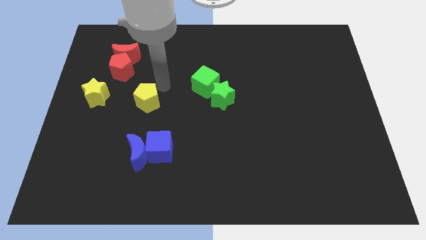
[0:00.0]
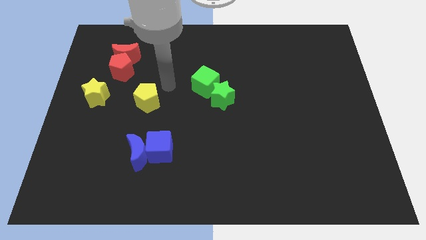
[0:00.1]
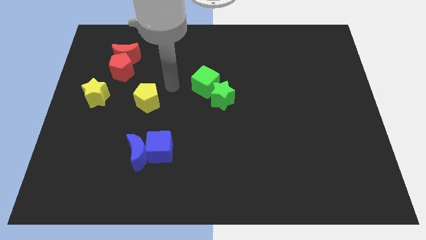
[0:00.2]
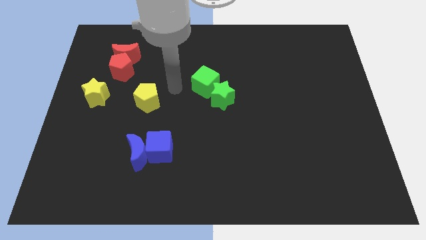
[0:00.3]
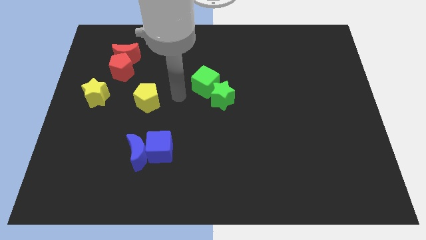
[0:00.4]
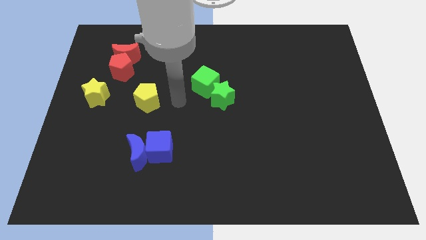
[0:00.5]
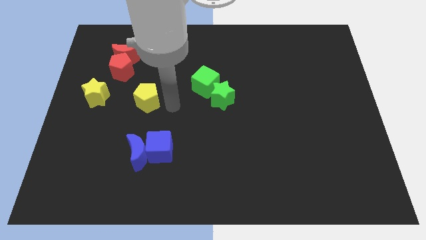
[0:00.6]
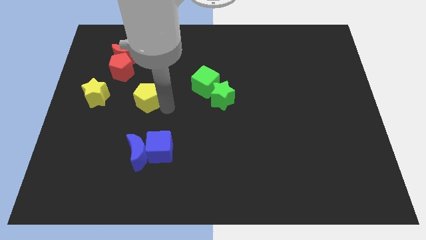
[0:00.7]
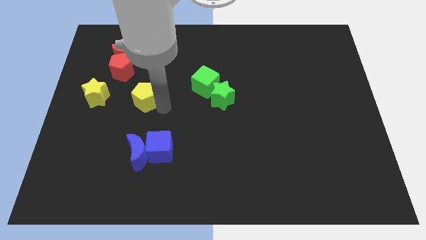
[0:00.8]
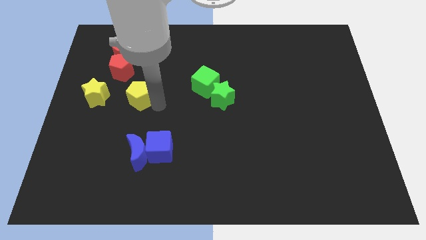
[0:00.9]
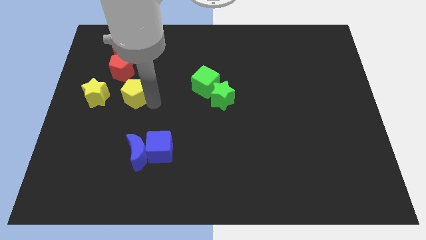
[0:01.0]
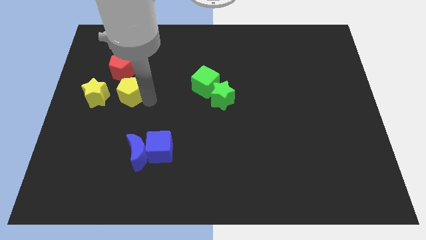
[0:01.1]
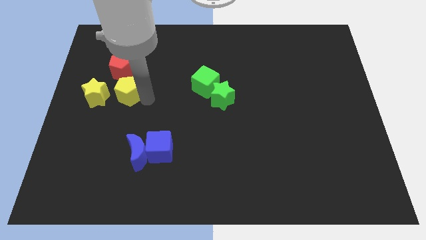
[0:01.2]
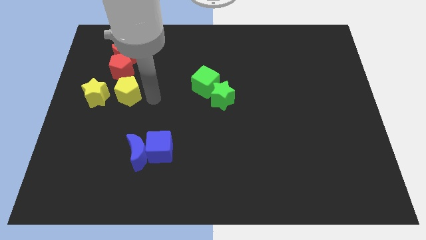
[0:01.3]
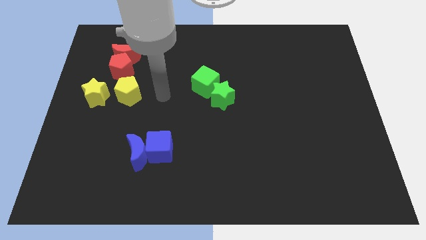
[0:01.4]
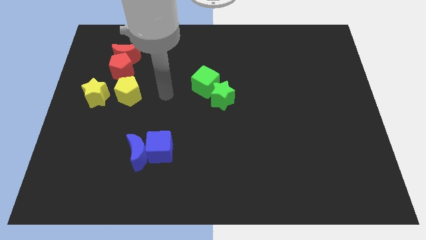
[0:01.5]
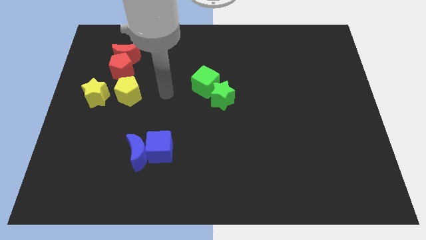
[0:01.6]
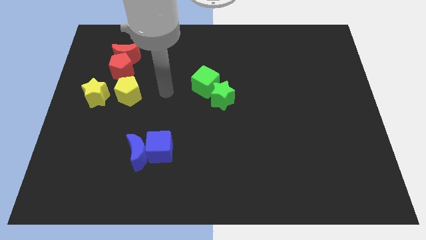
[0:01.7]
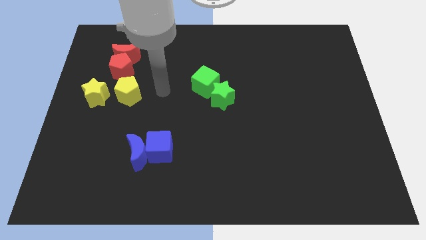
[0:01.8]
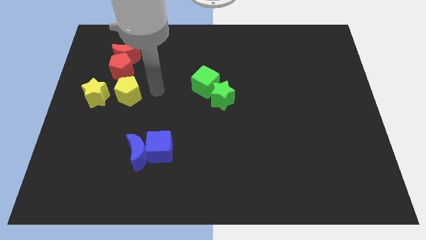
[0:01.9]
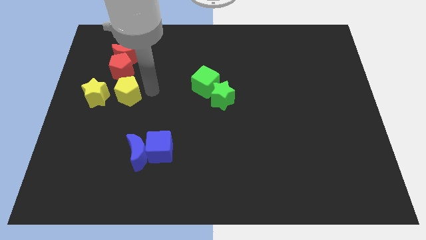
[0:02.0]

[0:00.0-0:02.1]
push yellow pentagon close to yellow star

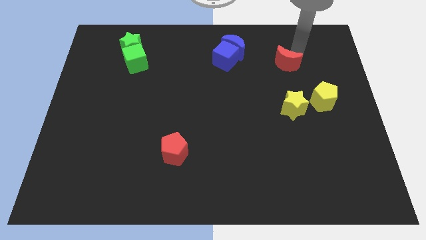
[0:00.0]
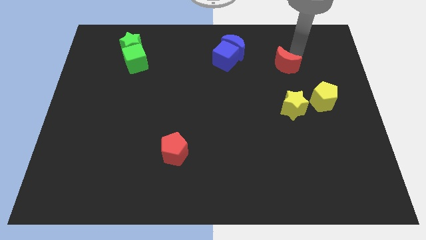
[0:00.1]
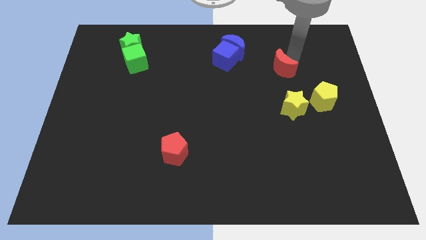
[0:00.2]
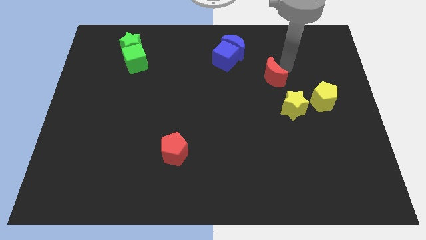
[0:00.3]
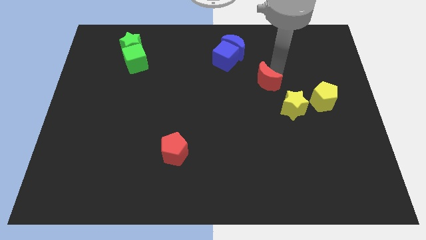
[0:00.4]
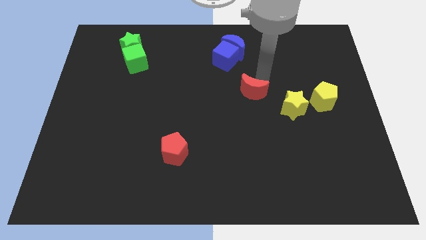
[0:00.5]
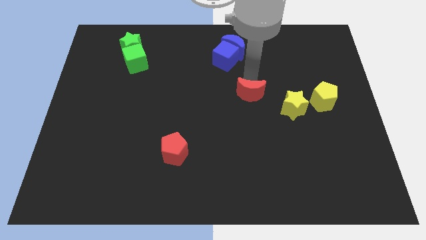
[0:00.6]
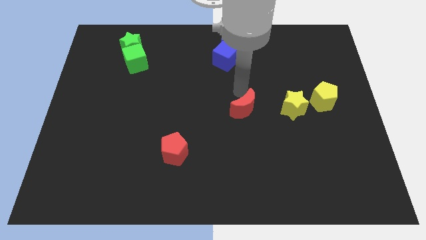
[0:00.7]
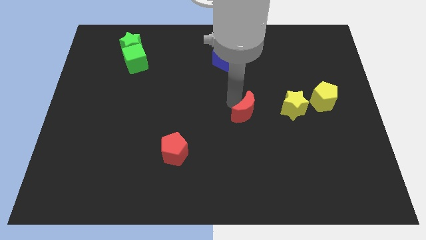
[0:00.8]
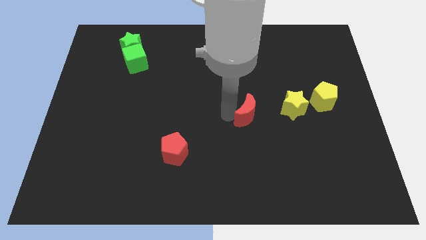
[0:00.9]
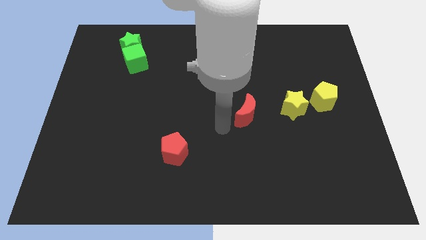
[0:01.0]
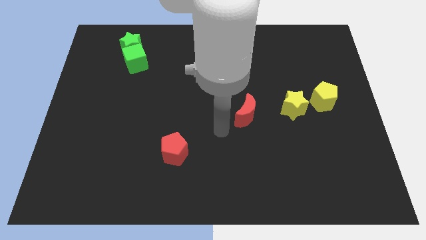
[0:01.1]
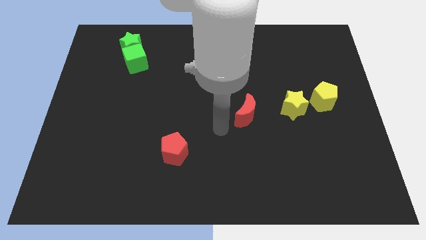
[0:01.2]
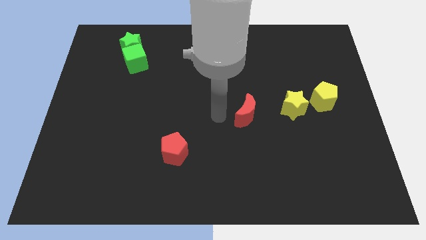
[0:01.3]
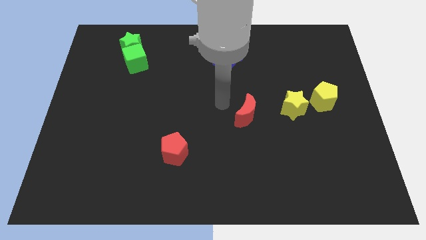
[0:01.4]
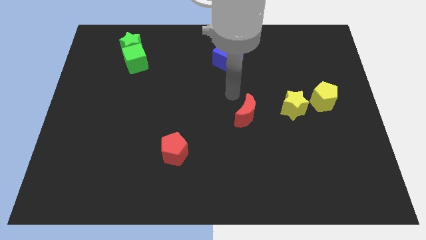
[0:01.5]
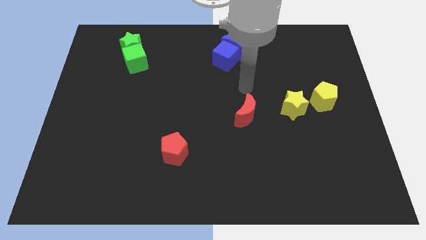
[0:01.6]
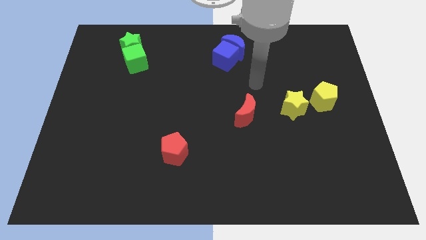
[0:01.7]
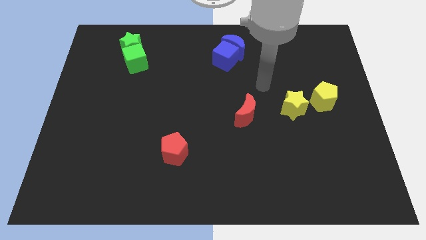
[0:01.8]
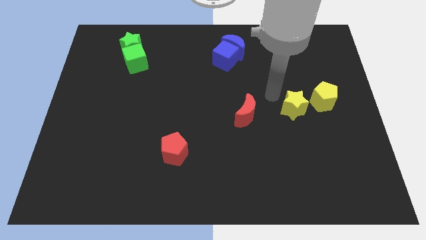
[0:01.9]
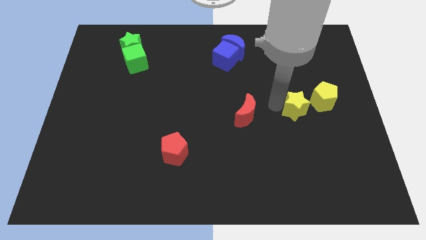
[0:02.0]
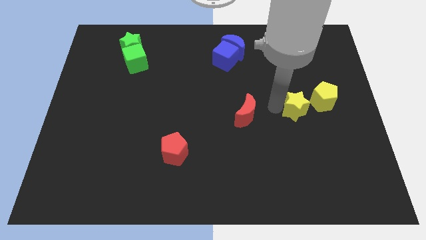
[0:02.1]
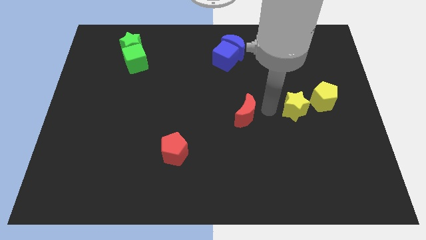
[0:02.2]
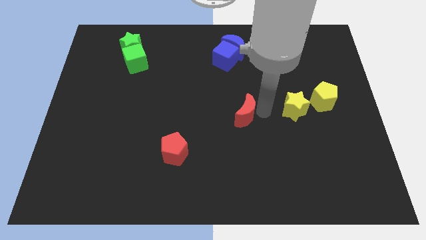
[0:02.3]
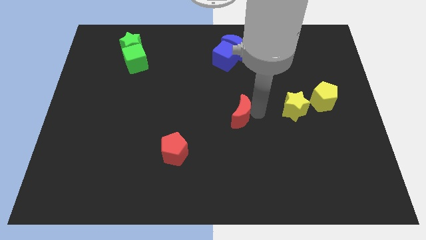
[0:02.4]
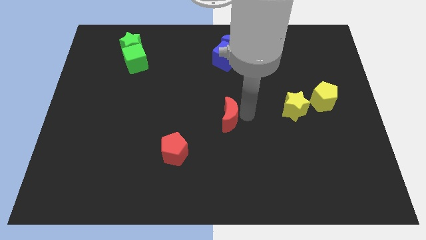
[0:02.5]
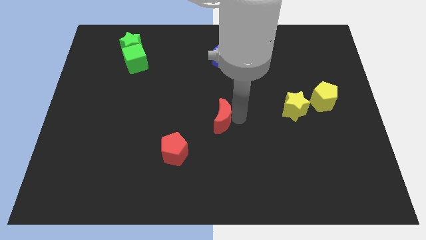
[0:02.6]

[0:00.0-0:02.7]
push red crescent below blue cube

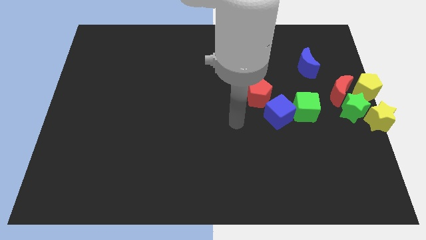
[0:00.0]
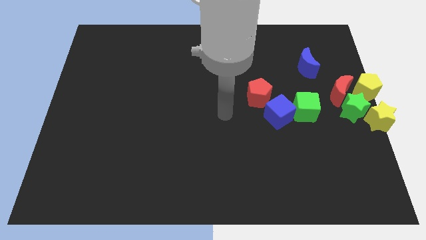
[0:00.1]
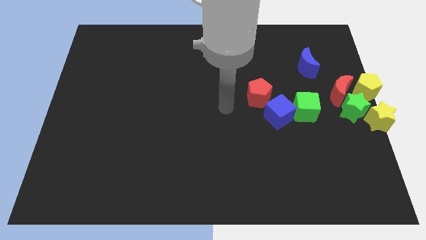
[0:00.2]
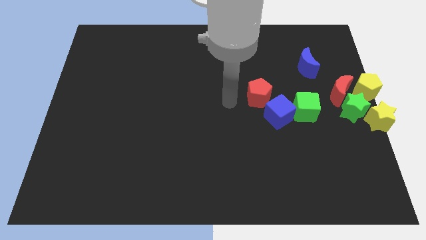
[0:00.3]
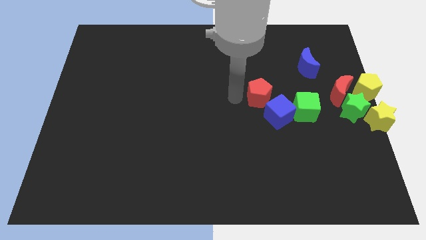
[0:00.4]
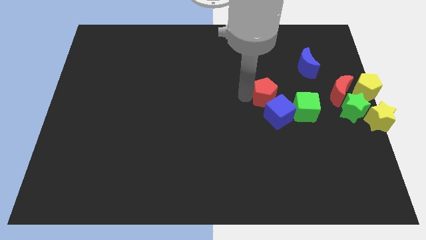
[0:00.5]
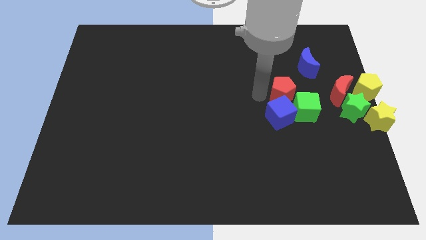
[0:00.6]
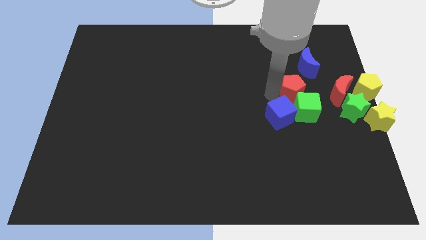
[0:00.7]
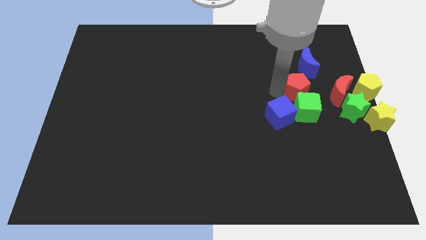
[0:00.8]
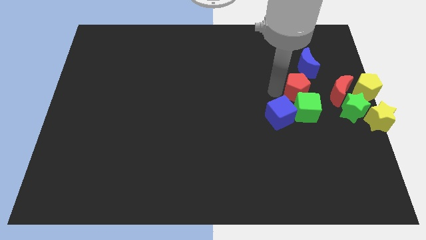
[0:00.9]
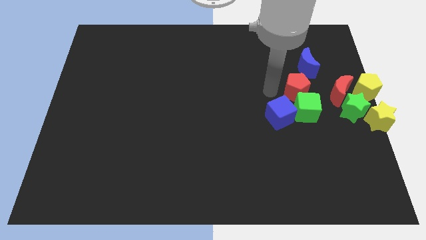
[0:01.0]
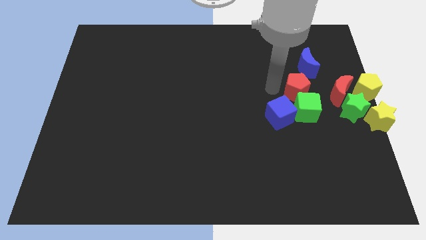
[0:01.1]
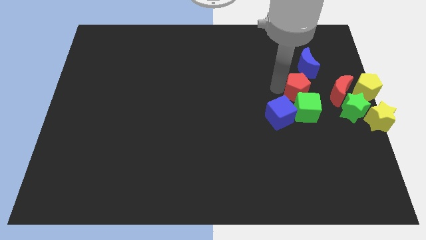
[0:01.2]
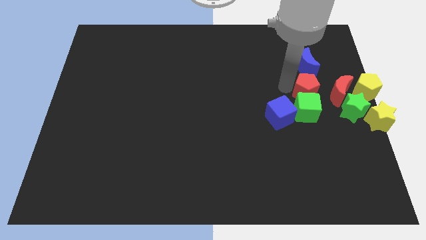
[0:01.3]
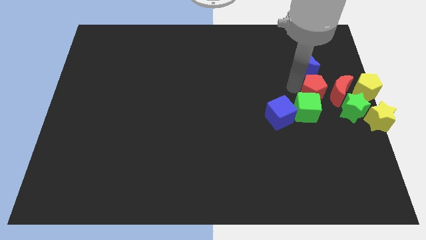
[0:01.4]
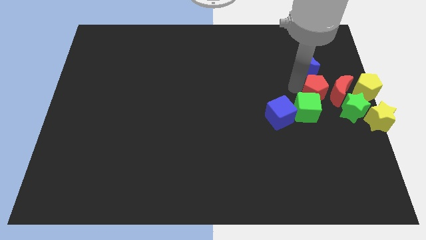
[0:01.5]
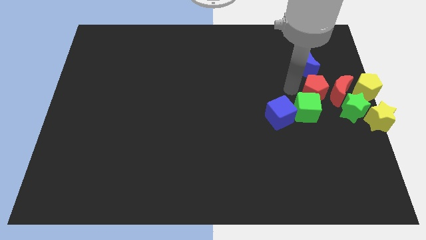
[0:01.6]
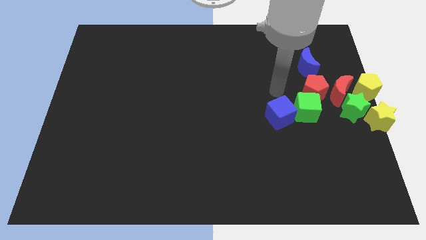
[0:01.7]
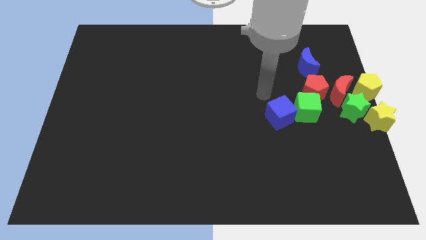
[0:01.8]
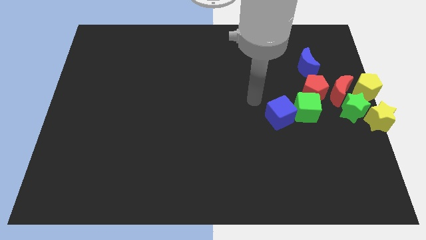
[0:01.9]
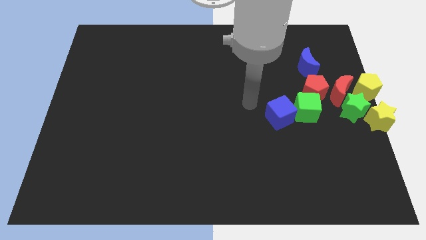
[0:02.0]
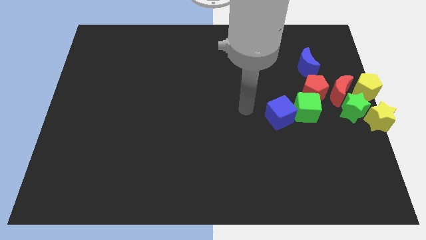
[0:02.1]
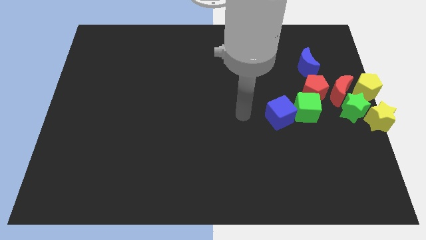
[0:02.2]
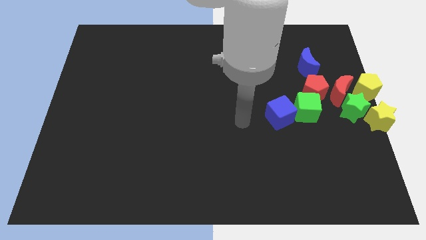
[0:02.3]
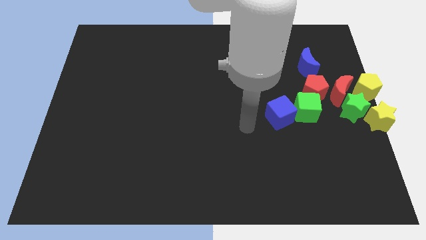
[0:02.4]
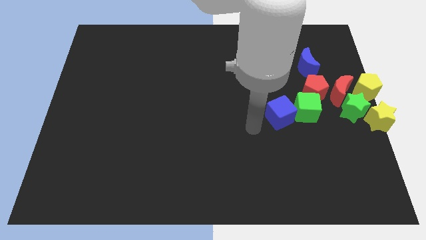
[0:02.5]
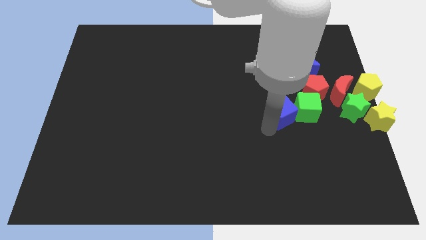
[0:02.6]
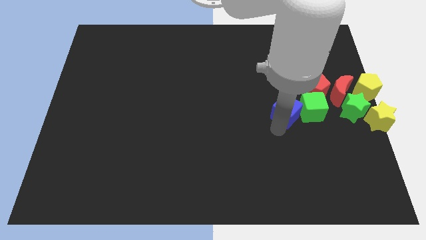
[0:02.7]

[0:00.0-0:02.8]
push the red pentagon closer to the red moon

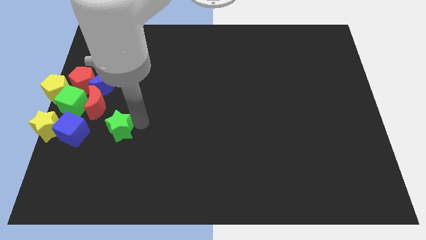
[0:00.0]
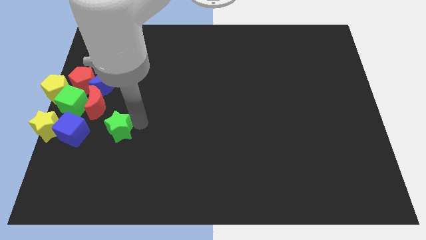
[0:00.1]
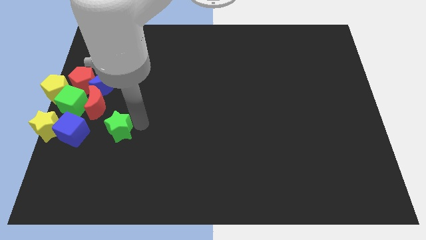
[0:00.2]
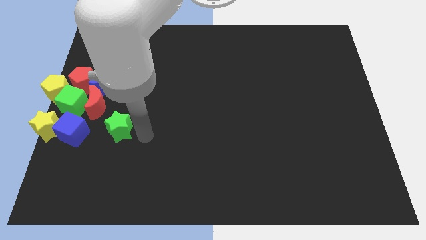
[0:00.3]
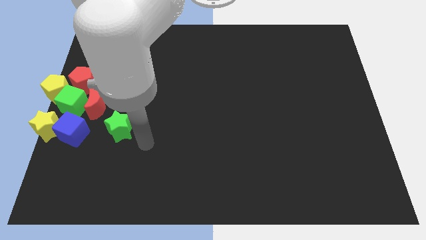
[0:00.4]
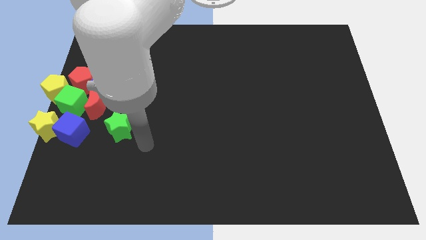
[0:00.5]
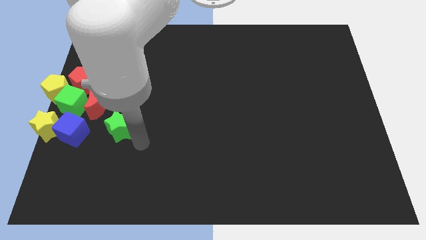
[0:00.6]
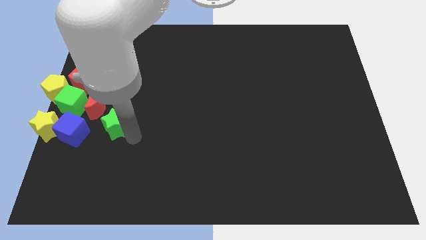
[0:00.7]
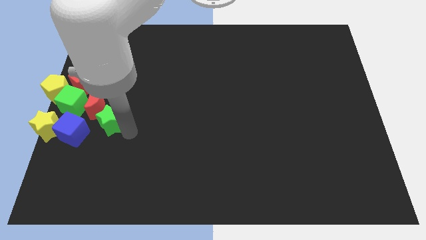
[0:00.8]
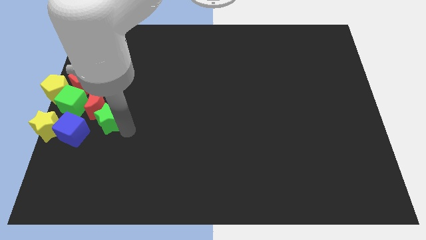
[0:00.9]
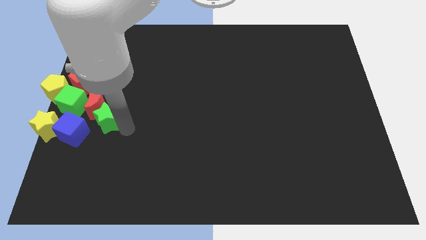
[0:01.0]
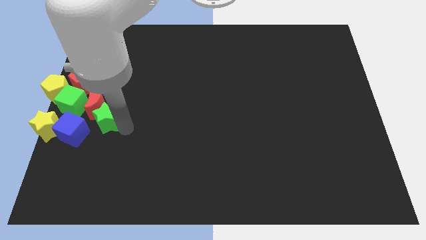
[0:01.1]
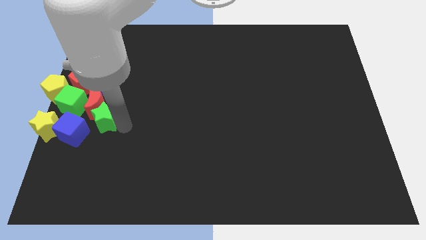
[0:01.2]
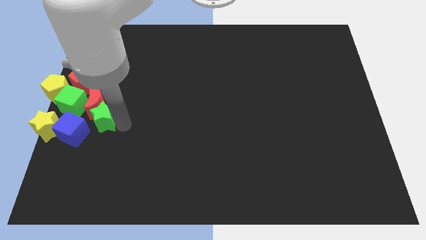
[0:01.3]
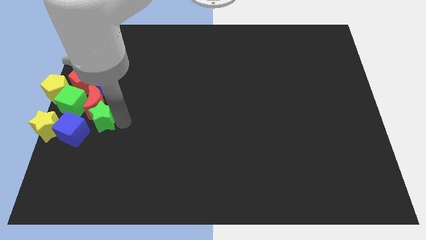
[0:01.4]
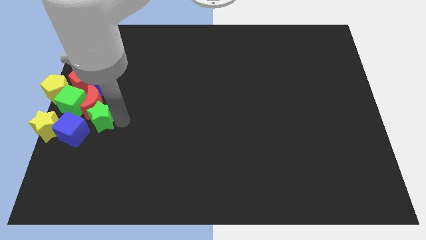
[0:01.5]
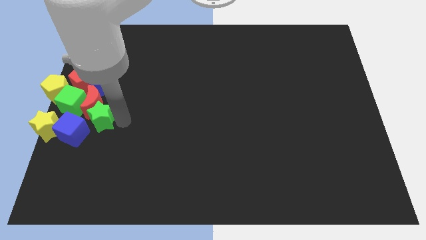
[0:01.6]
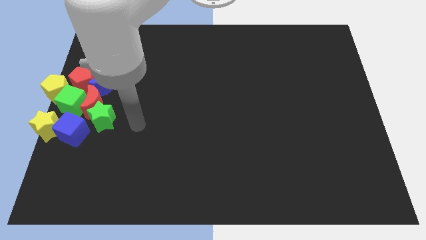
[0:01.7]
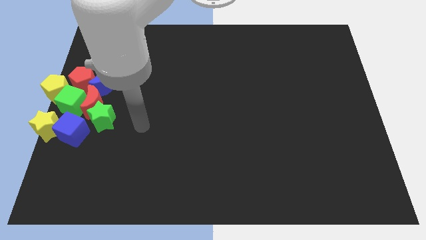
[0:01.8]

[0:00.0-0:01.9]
push the green star into the red moon
